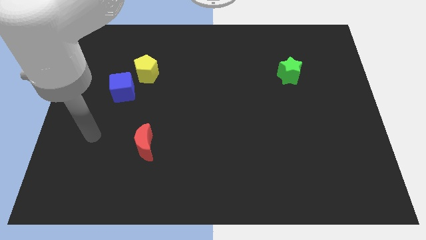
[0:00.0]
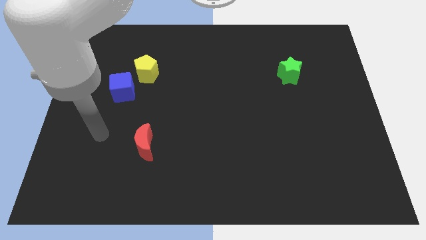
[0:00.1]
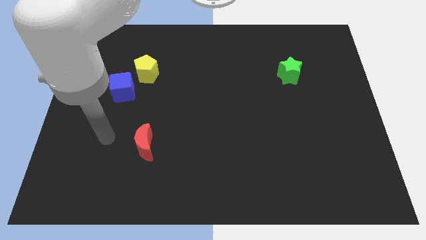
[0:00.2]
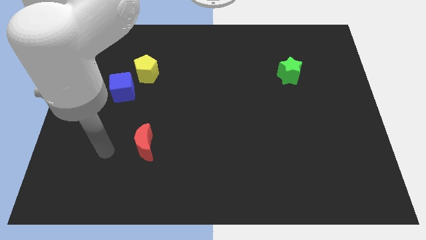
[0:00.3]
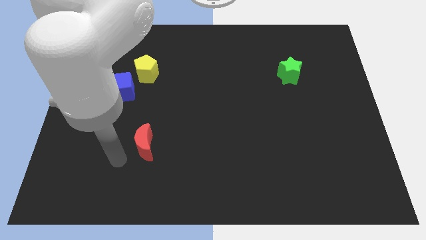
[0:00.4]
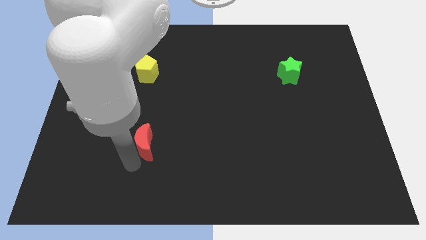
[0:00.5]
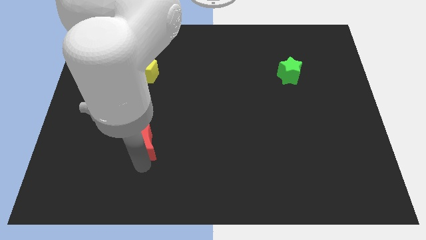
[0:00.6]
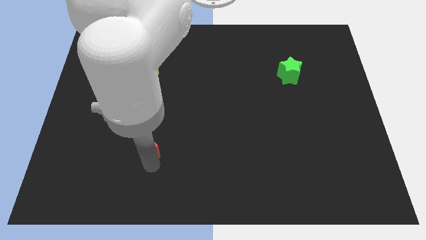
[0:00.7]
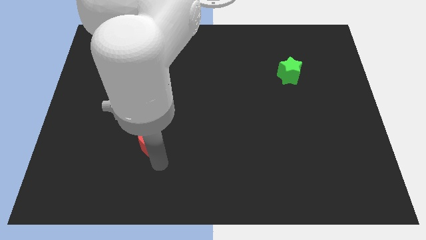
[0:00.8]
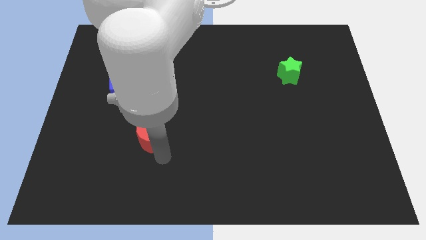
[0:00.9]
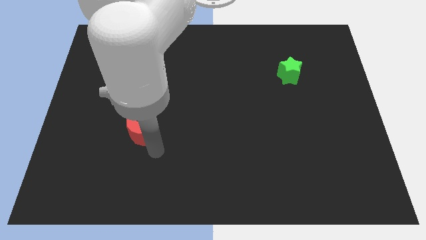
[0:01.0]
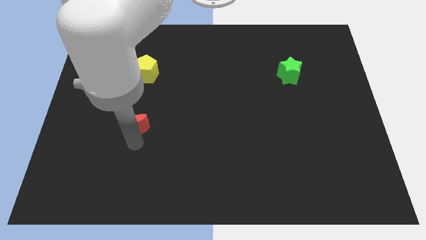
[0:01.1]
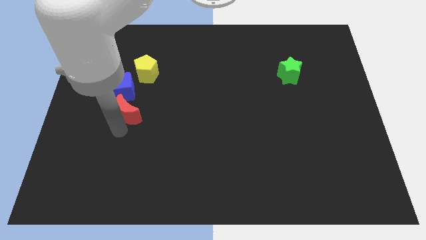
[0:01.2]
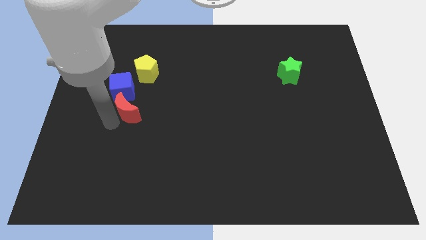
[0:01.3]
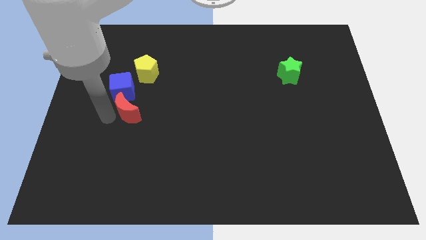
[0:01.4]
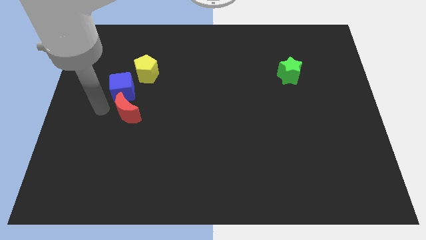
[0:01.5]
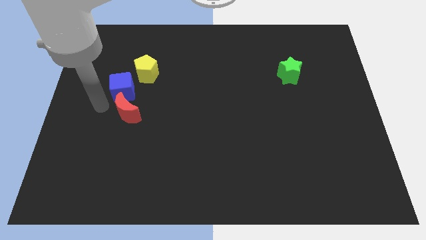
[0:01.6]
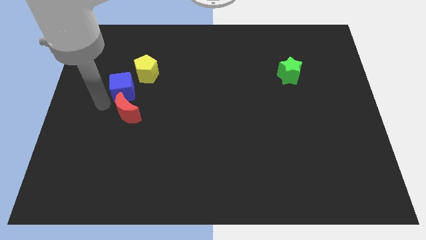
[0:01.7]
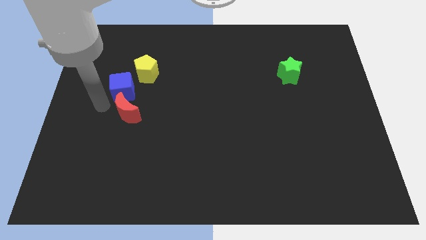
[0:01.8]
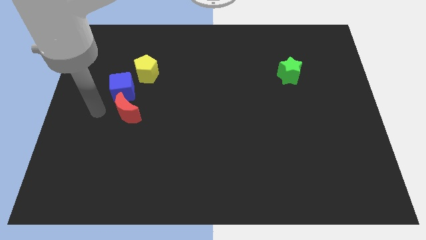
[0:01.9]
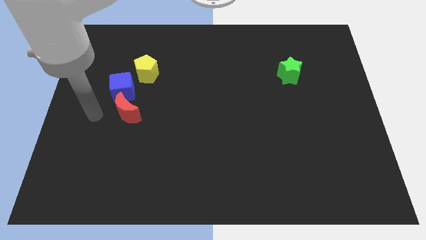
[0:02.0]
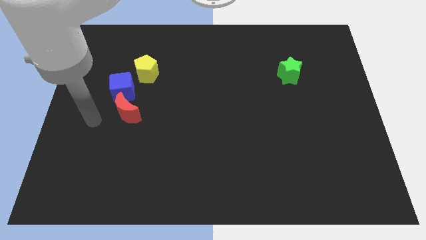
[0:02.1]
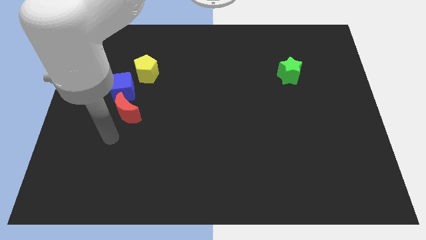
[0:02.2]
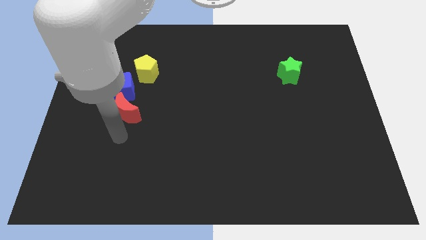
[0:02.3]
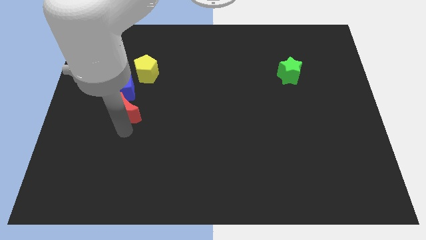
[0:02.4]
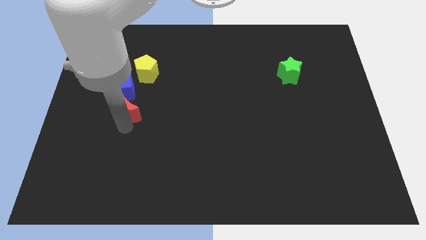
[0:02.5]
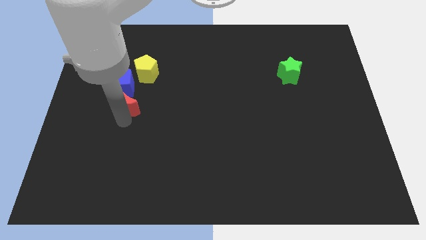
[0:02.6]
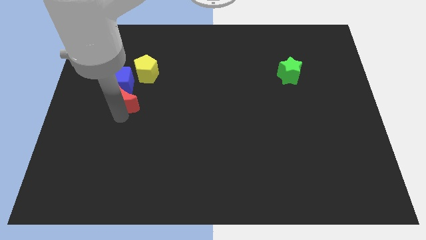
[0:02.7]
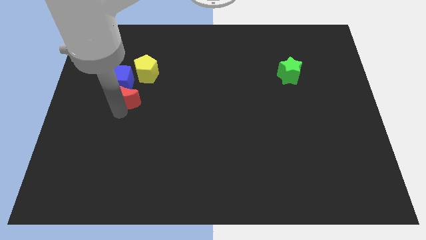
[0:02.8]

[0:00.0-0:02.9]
put the moon next to the blue block

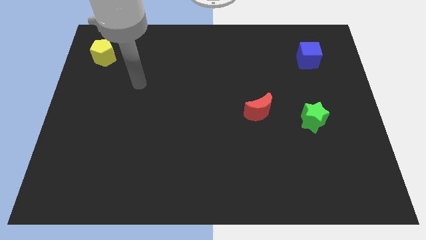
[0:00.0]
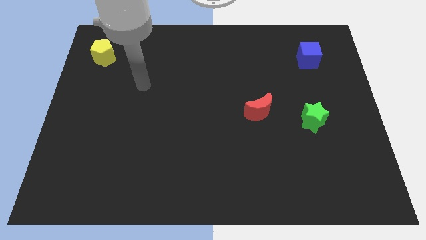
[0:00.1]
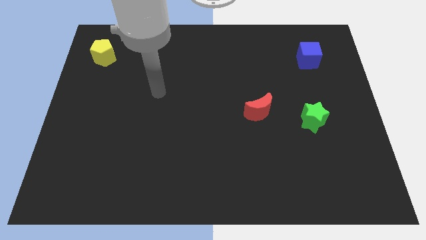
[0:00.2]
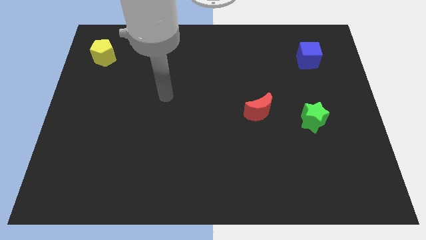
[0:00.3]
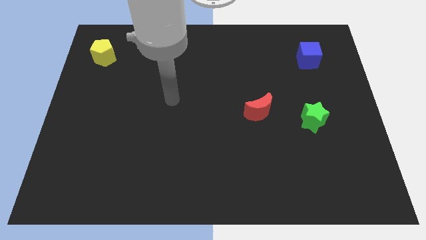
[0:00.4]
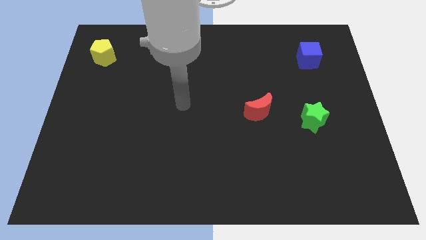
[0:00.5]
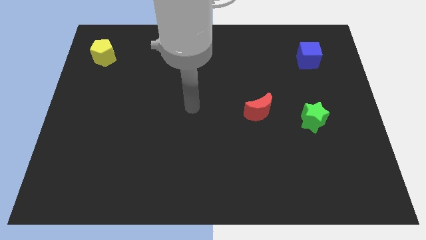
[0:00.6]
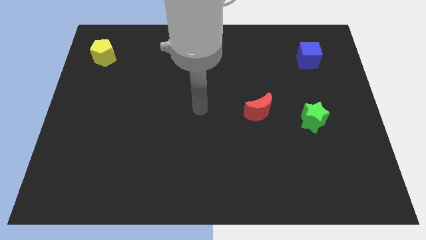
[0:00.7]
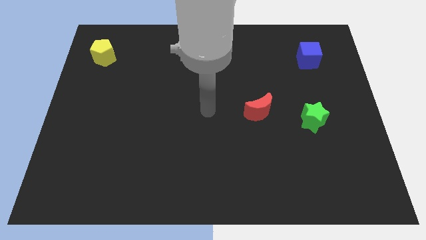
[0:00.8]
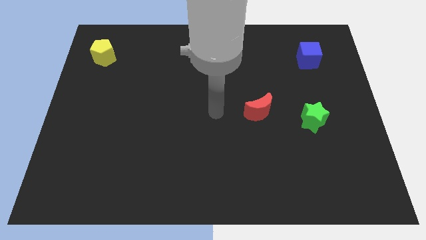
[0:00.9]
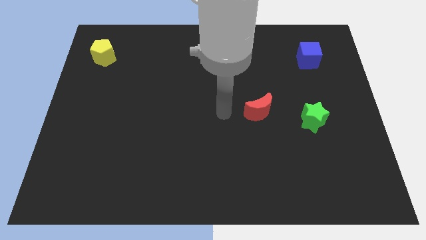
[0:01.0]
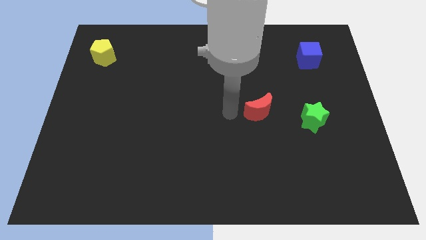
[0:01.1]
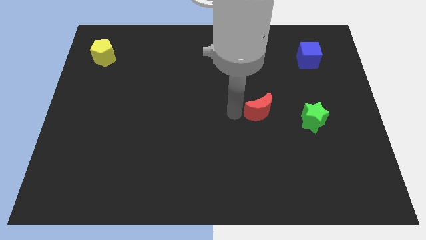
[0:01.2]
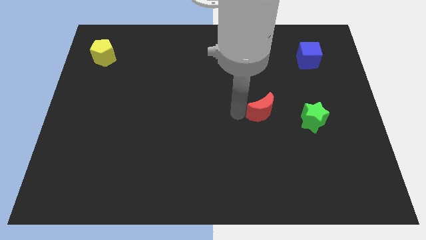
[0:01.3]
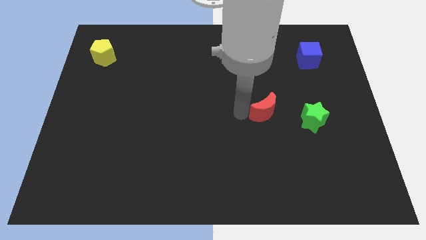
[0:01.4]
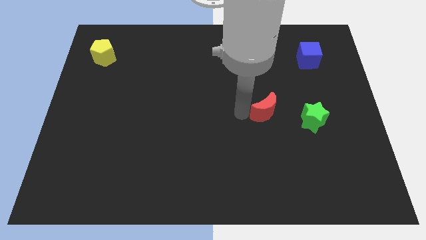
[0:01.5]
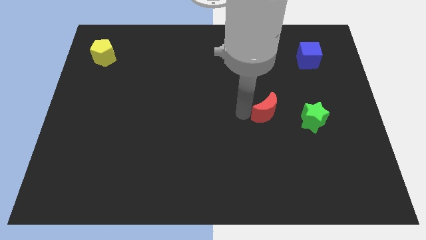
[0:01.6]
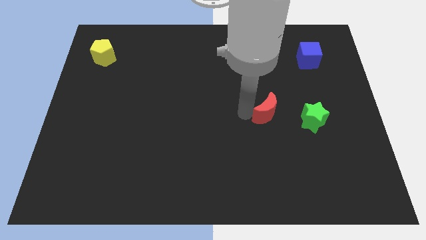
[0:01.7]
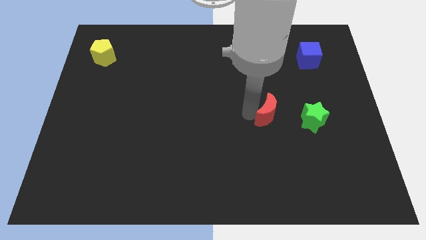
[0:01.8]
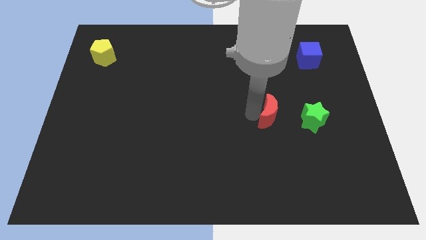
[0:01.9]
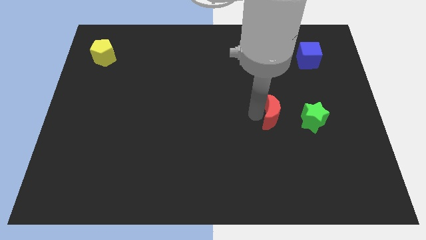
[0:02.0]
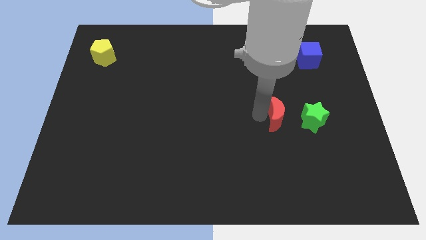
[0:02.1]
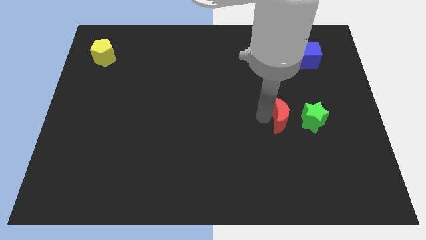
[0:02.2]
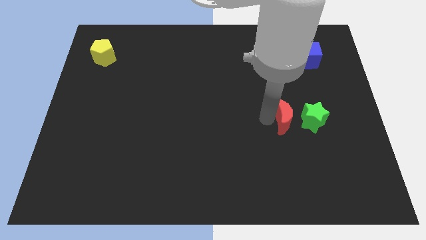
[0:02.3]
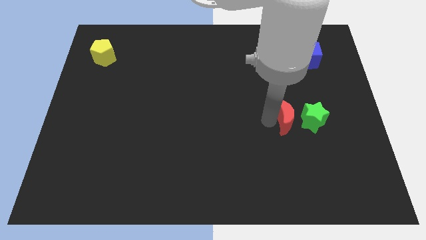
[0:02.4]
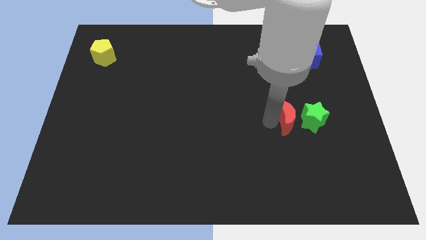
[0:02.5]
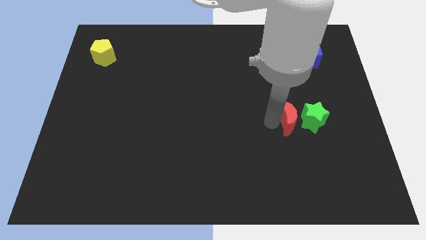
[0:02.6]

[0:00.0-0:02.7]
push the moon towards the star

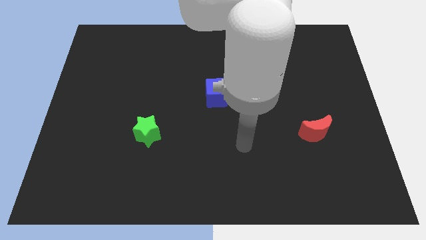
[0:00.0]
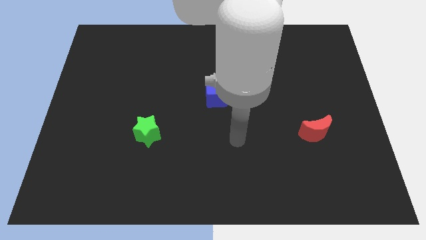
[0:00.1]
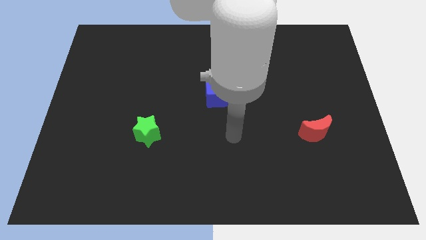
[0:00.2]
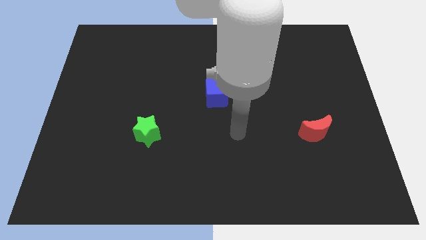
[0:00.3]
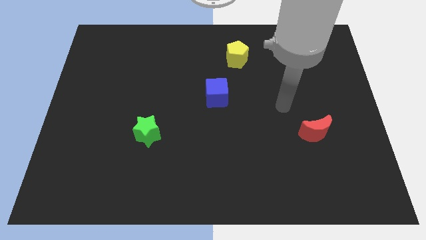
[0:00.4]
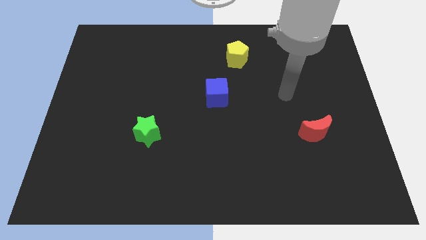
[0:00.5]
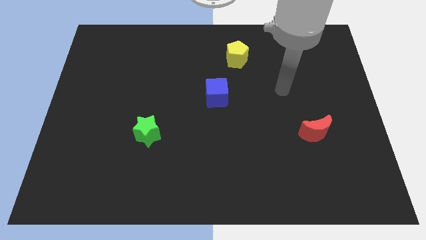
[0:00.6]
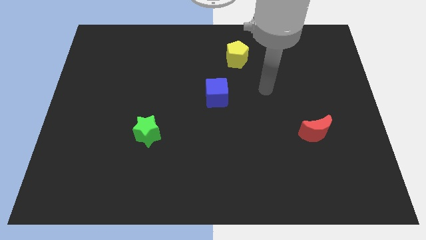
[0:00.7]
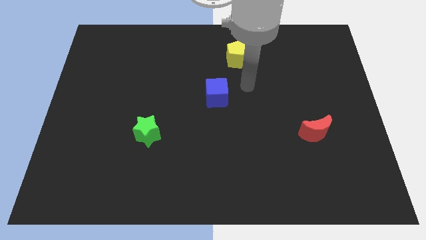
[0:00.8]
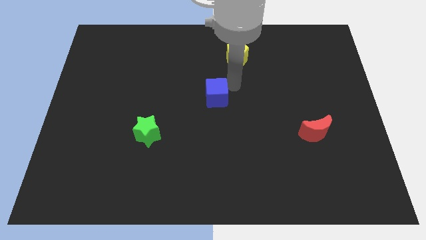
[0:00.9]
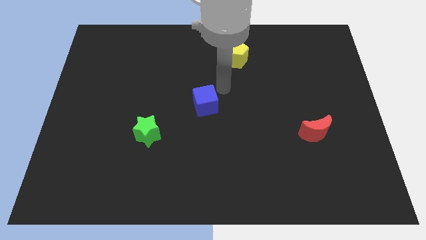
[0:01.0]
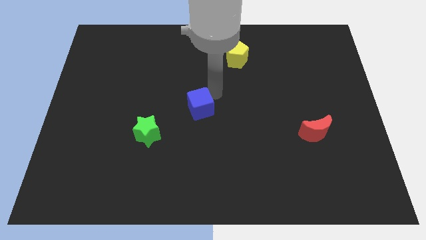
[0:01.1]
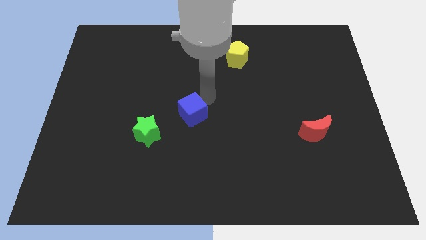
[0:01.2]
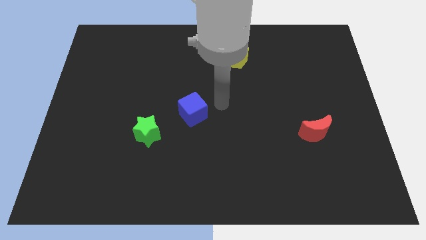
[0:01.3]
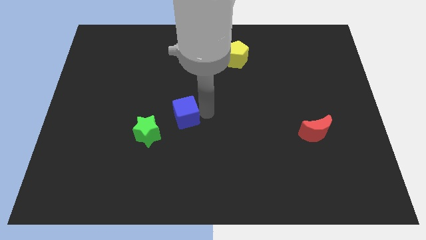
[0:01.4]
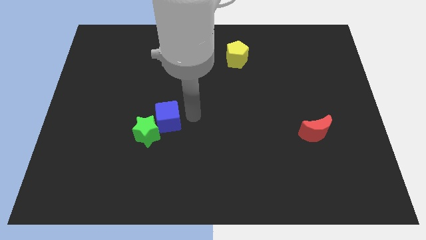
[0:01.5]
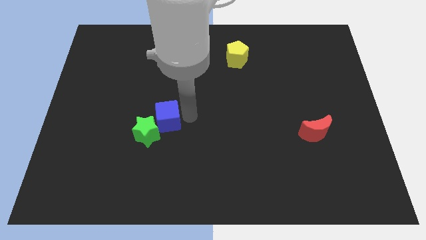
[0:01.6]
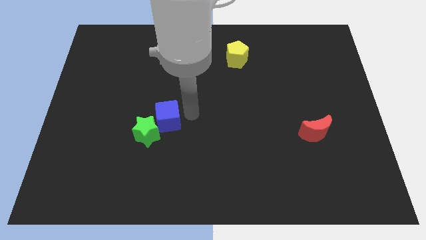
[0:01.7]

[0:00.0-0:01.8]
move the blue cube to the green block

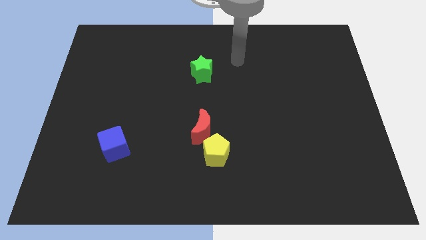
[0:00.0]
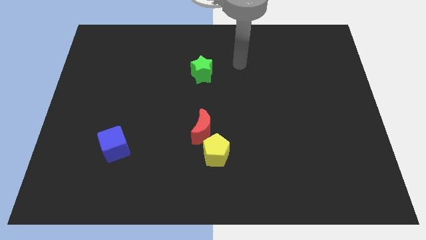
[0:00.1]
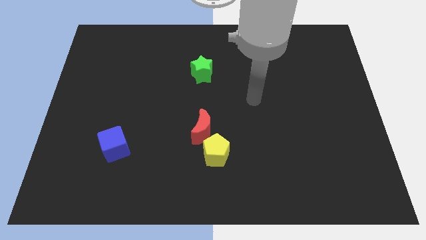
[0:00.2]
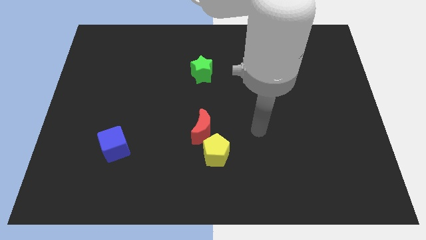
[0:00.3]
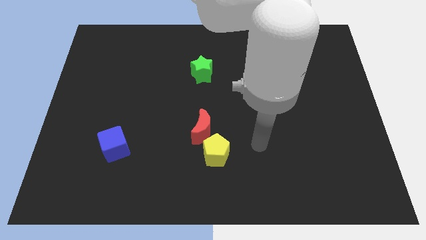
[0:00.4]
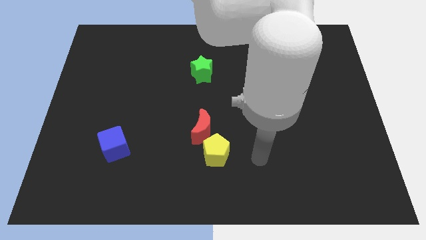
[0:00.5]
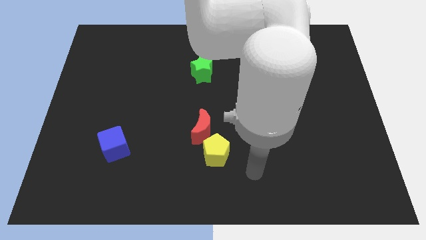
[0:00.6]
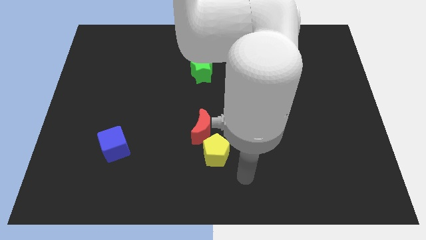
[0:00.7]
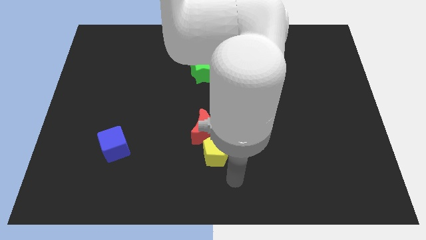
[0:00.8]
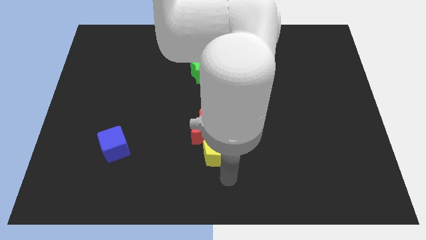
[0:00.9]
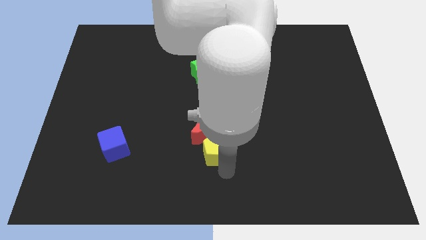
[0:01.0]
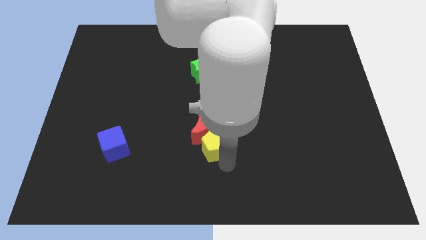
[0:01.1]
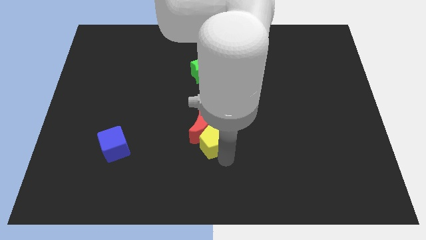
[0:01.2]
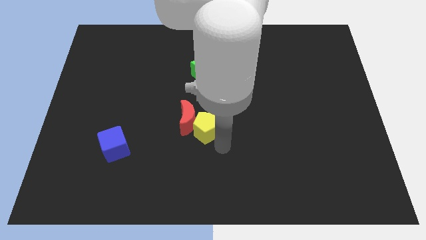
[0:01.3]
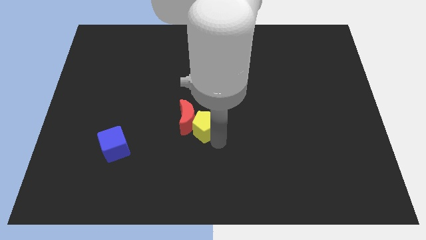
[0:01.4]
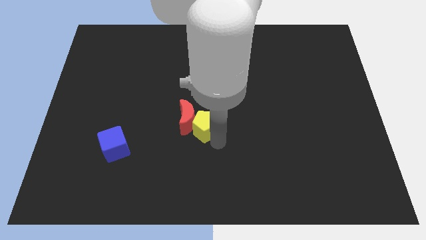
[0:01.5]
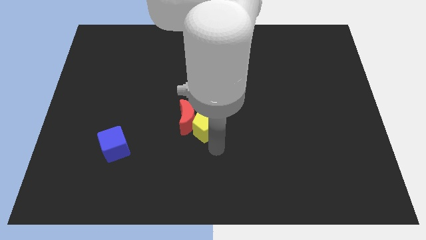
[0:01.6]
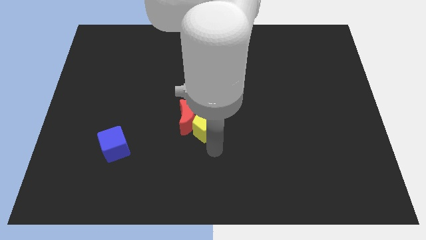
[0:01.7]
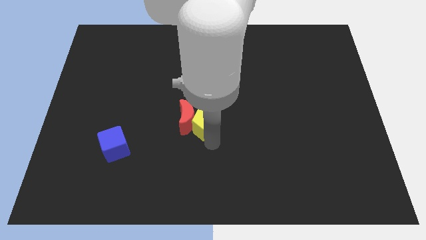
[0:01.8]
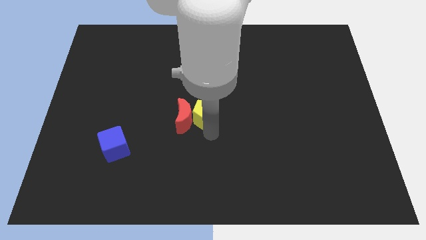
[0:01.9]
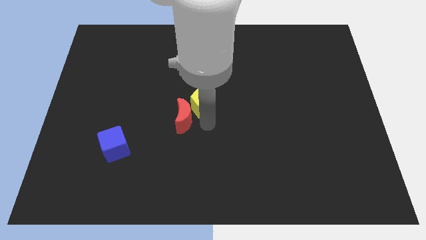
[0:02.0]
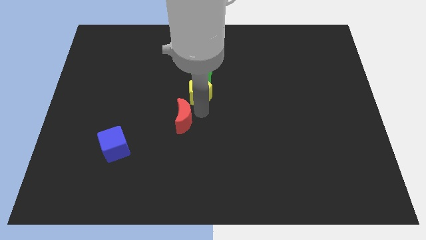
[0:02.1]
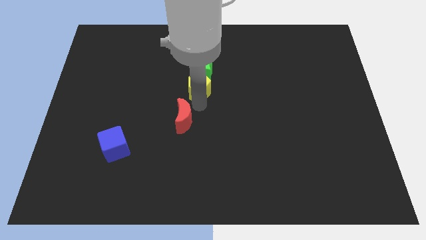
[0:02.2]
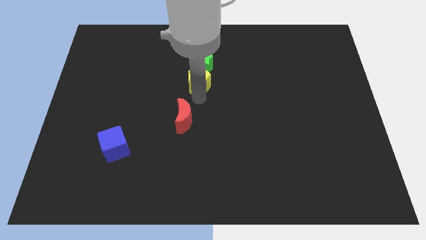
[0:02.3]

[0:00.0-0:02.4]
move the yellow pentagon towards the star
